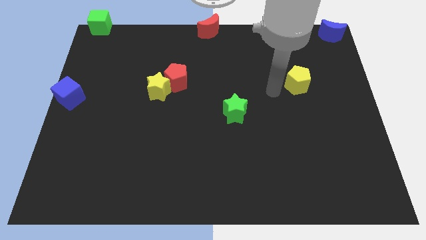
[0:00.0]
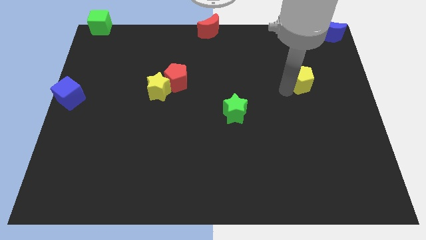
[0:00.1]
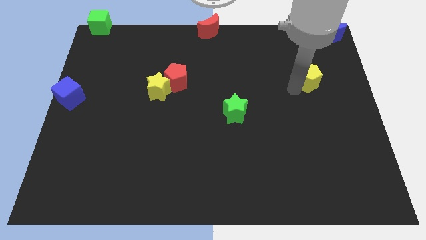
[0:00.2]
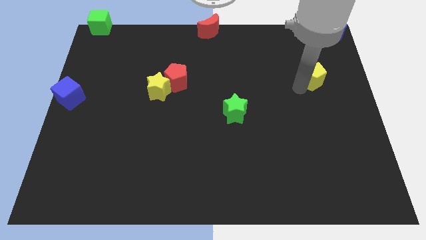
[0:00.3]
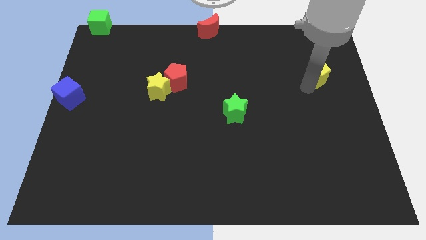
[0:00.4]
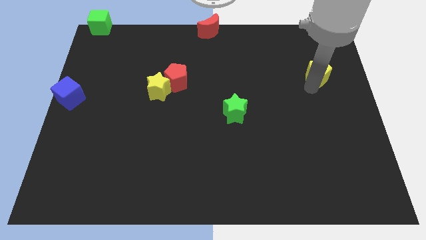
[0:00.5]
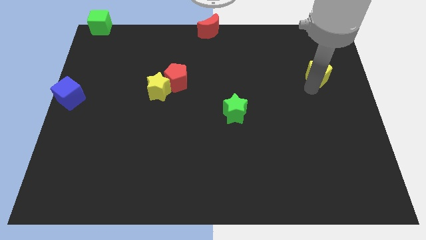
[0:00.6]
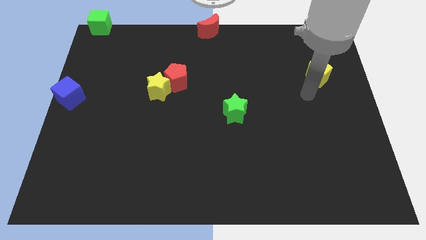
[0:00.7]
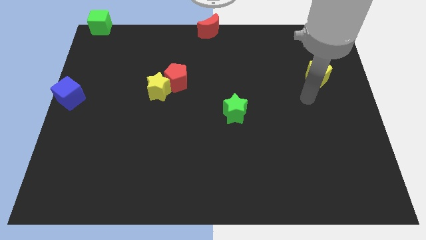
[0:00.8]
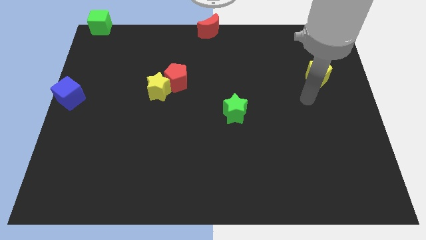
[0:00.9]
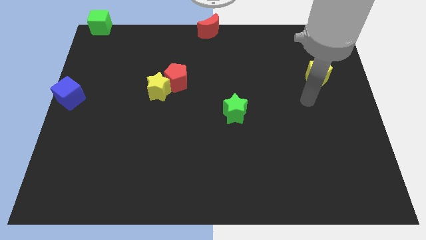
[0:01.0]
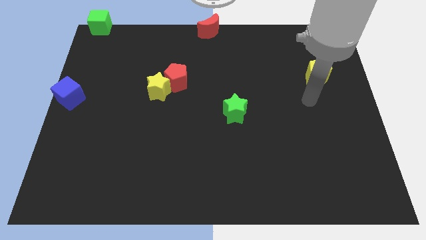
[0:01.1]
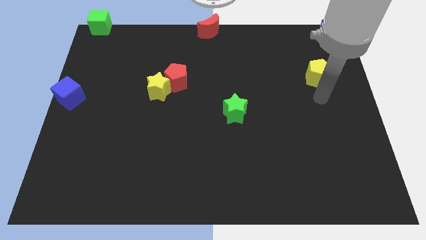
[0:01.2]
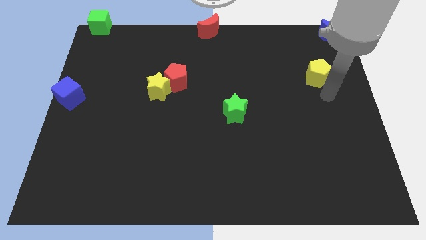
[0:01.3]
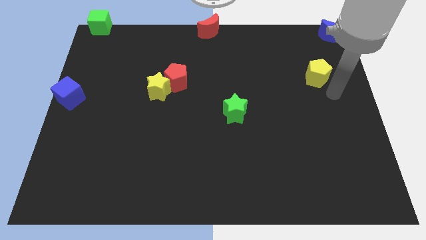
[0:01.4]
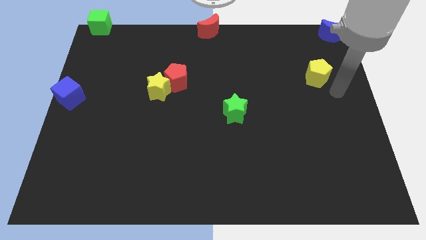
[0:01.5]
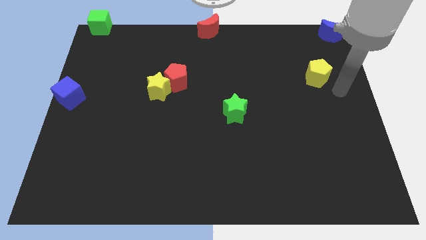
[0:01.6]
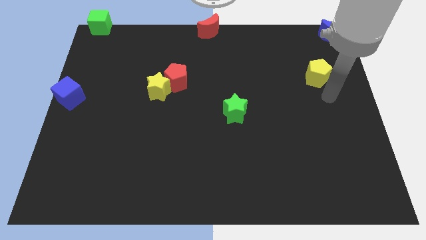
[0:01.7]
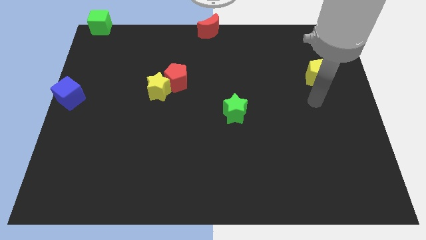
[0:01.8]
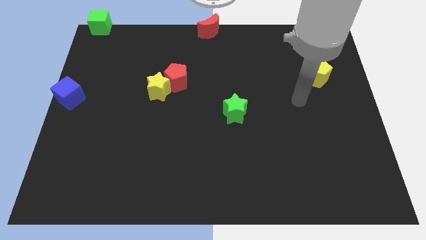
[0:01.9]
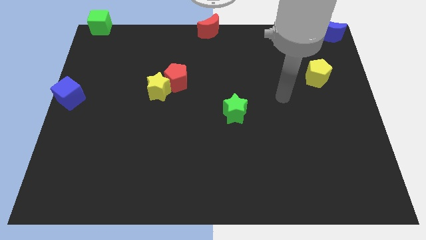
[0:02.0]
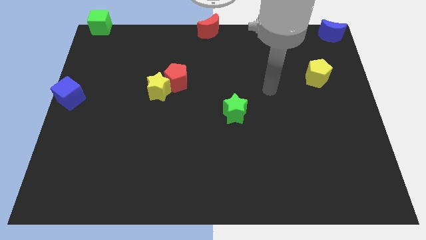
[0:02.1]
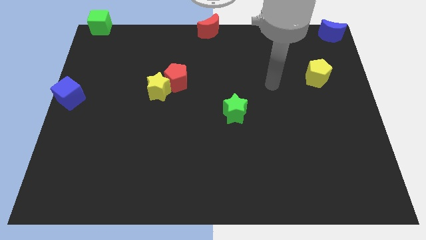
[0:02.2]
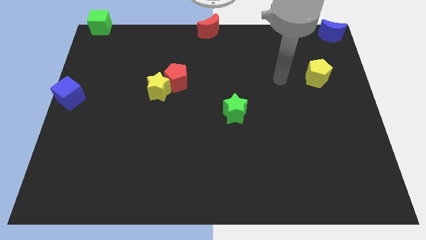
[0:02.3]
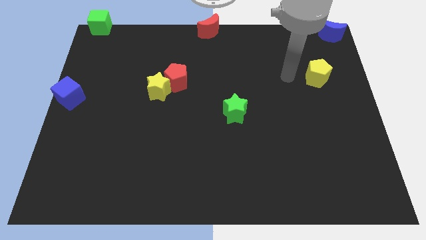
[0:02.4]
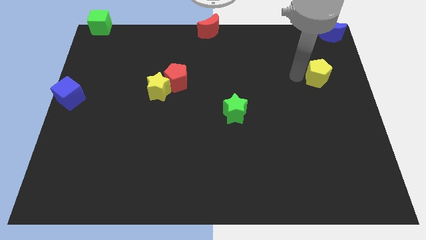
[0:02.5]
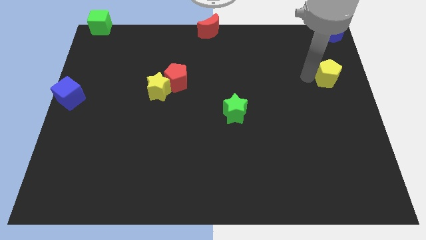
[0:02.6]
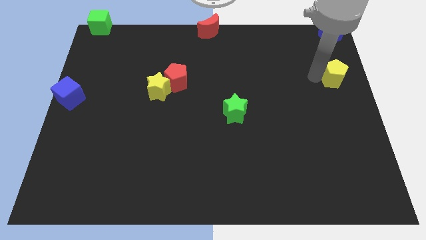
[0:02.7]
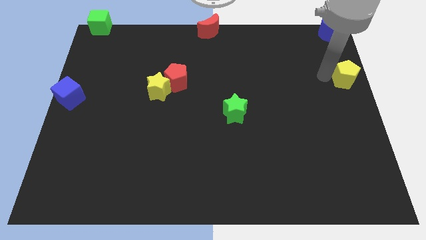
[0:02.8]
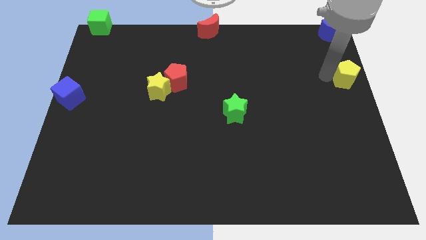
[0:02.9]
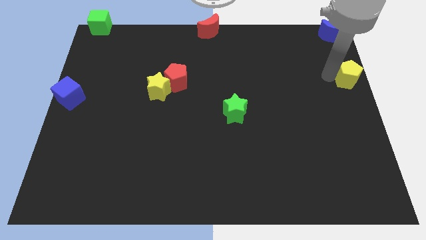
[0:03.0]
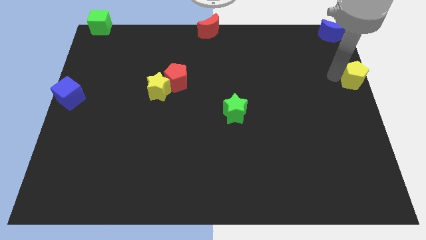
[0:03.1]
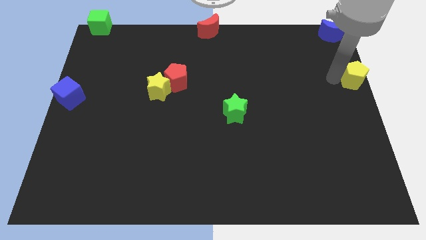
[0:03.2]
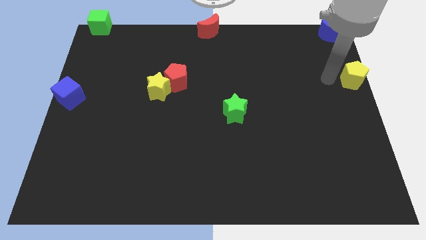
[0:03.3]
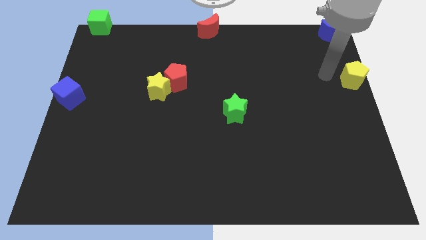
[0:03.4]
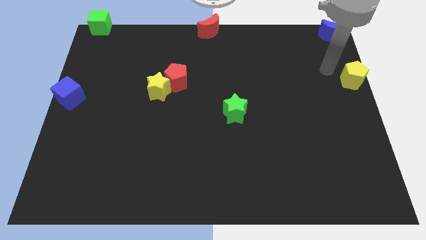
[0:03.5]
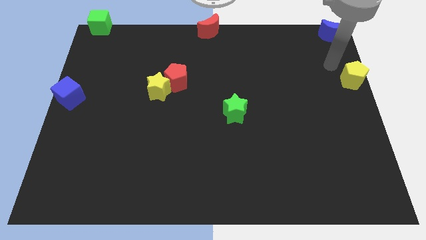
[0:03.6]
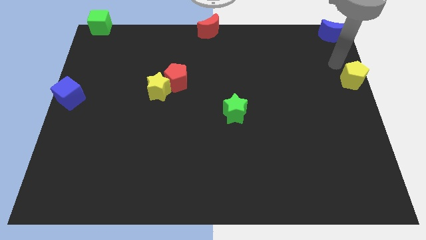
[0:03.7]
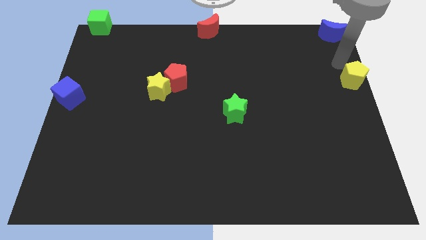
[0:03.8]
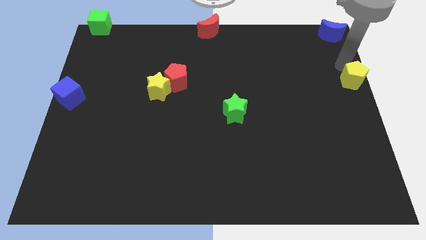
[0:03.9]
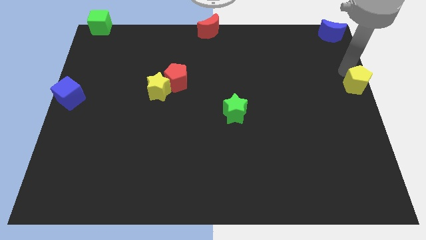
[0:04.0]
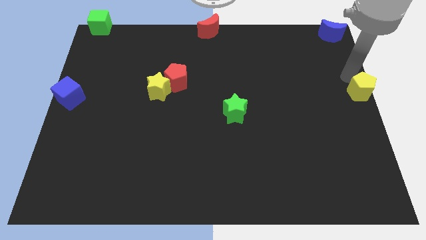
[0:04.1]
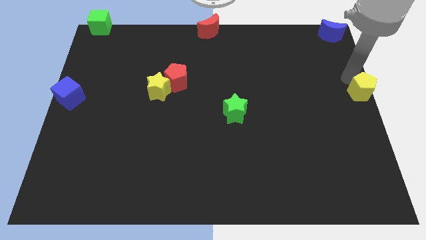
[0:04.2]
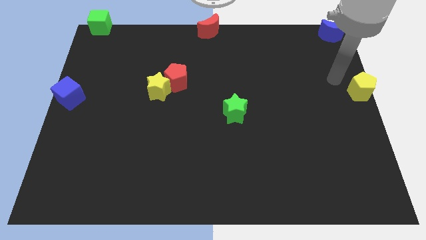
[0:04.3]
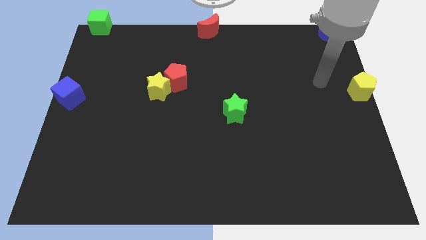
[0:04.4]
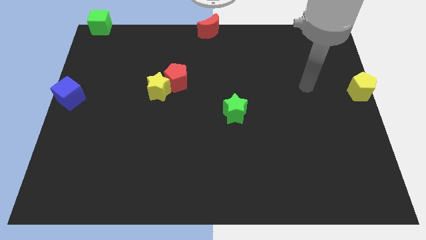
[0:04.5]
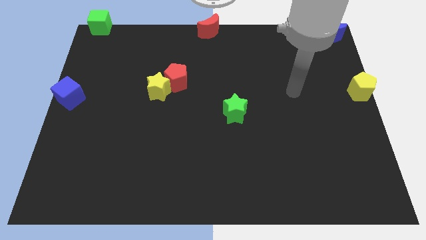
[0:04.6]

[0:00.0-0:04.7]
place the yellow pentagon horizontally to the right side of the yellow star

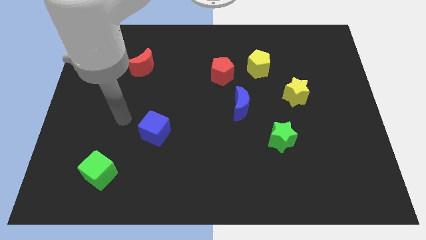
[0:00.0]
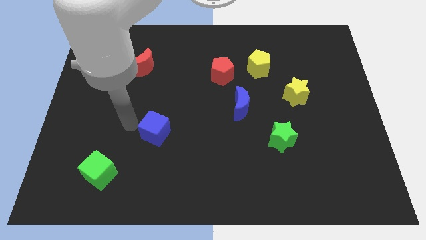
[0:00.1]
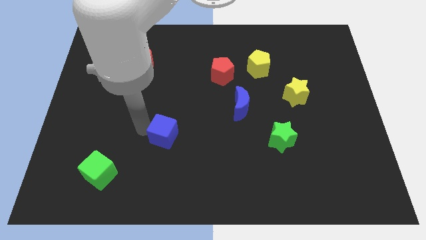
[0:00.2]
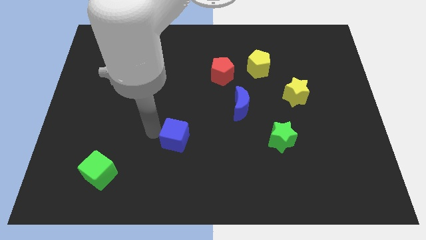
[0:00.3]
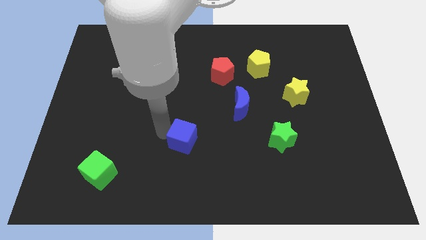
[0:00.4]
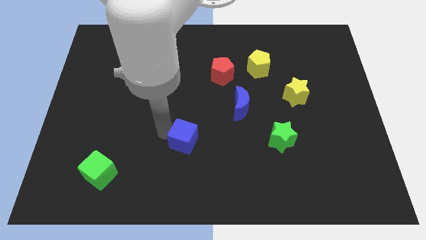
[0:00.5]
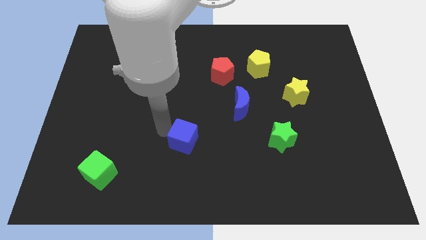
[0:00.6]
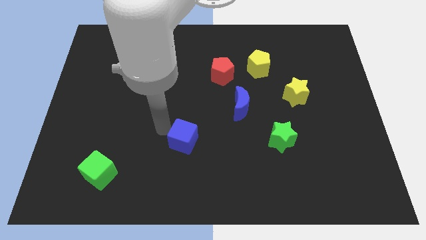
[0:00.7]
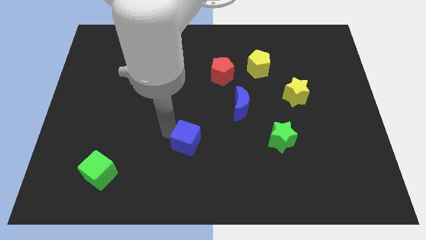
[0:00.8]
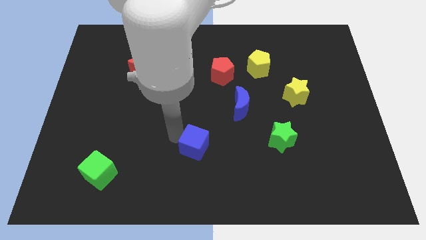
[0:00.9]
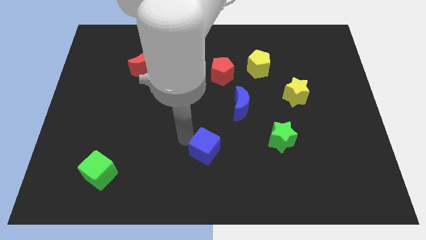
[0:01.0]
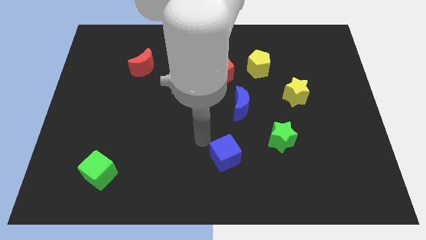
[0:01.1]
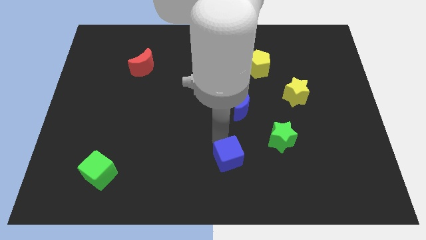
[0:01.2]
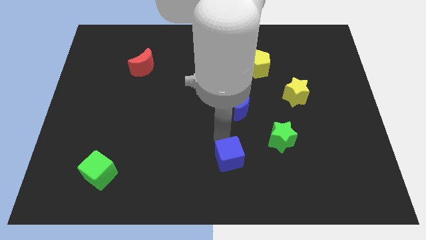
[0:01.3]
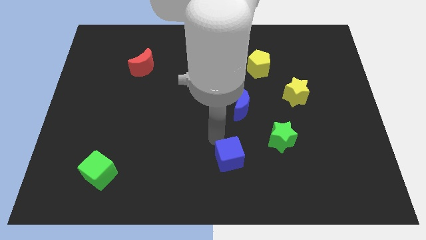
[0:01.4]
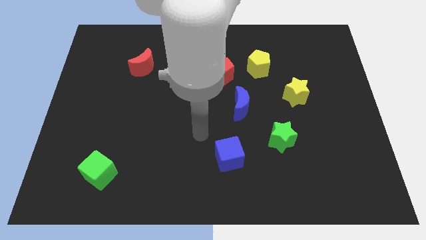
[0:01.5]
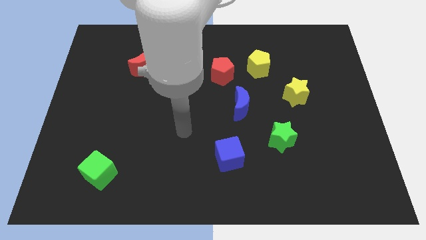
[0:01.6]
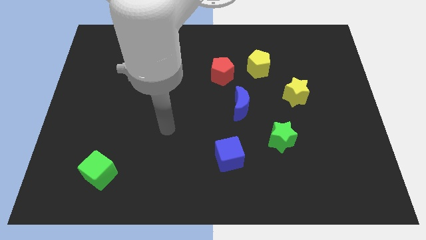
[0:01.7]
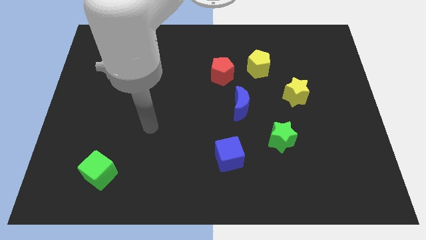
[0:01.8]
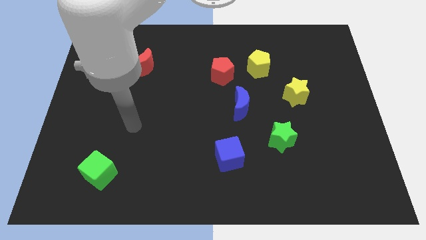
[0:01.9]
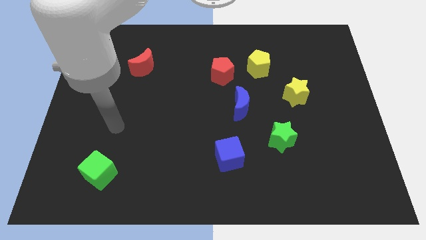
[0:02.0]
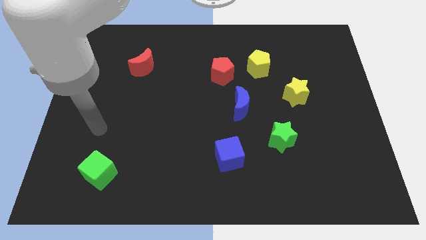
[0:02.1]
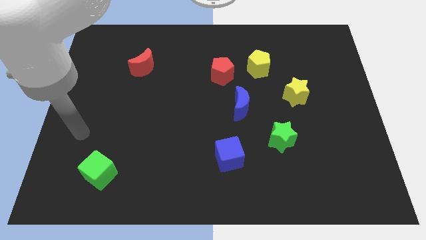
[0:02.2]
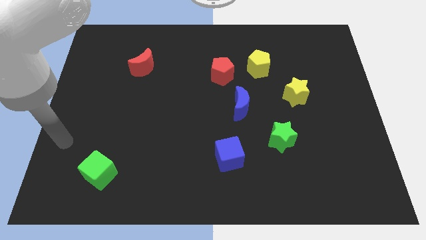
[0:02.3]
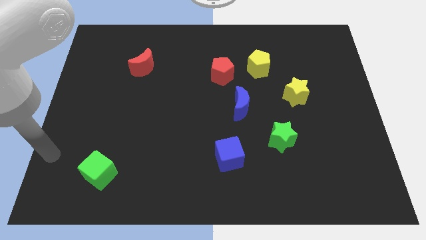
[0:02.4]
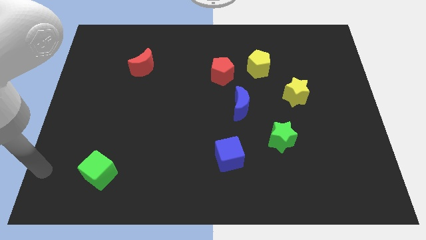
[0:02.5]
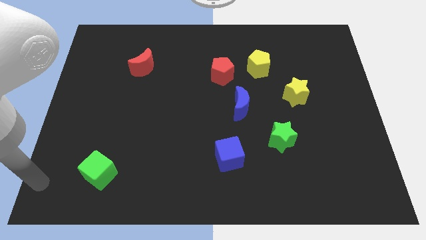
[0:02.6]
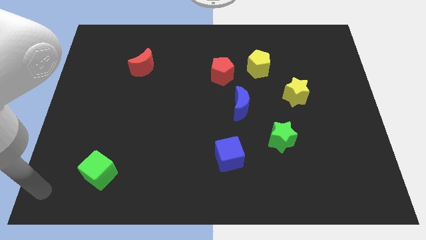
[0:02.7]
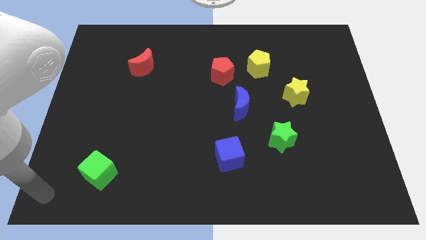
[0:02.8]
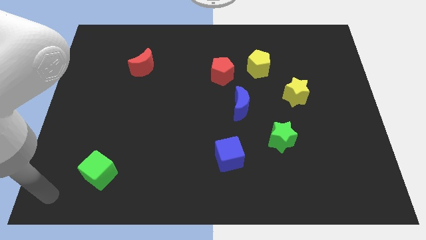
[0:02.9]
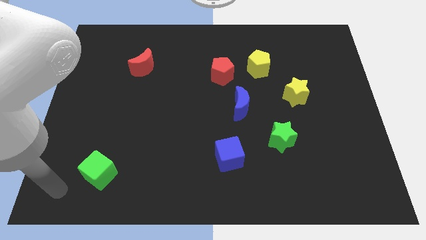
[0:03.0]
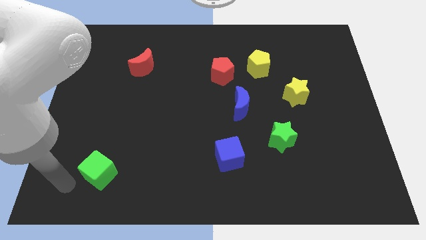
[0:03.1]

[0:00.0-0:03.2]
push the blue cube towards the bottom left to green star

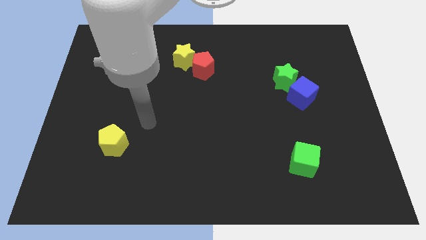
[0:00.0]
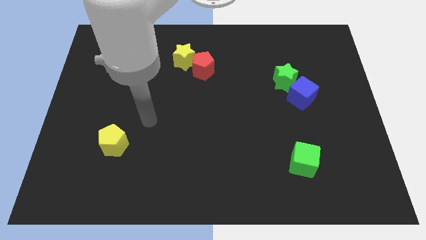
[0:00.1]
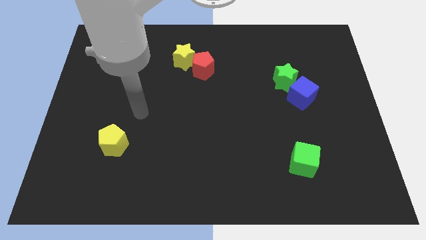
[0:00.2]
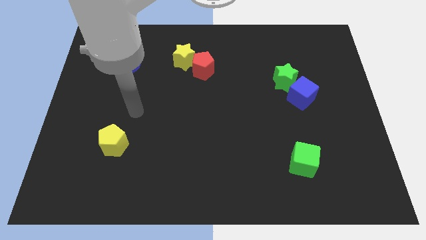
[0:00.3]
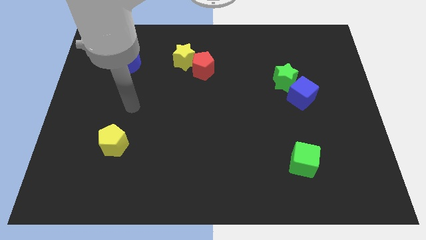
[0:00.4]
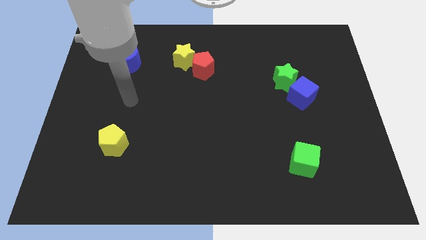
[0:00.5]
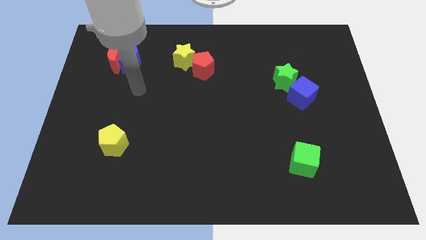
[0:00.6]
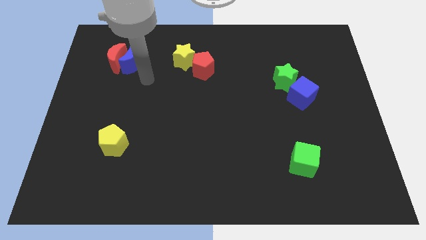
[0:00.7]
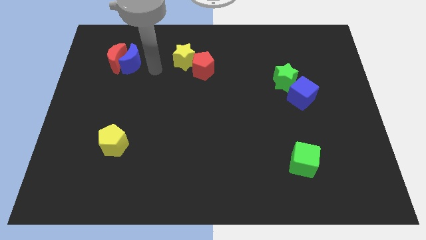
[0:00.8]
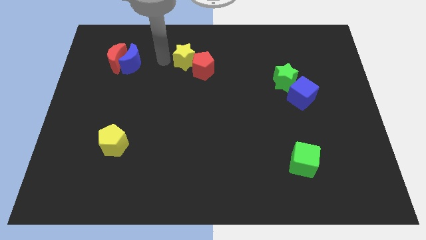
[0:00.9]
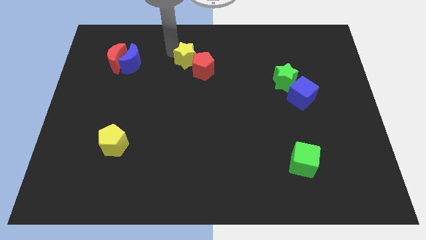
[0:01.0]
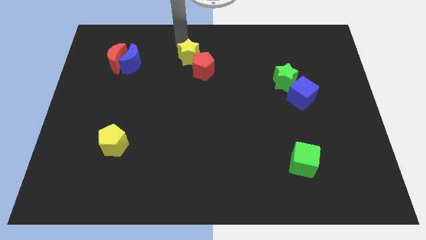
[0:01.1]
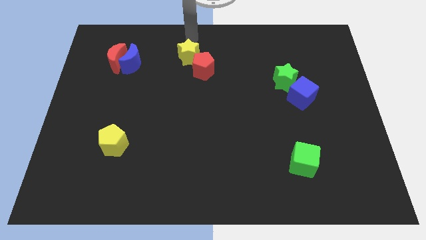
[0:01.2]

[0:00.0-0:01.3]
place your arm to the top of the yellow star
